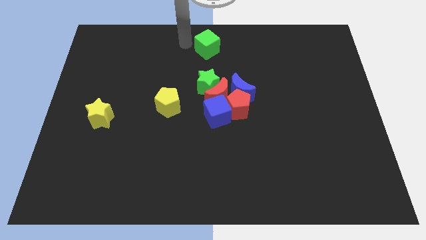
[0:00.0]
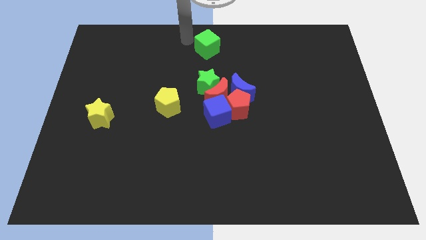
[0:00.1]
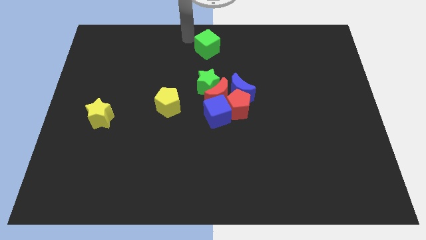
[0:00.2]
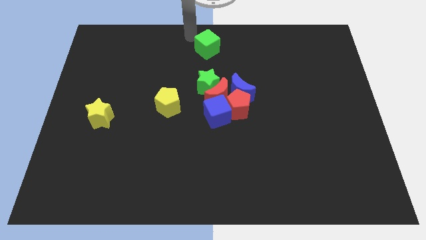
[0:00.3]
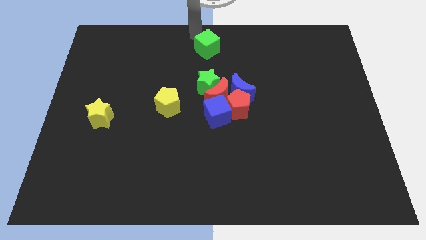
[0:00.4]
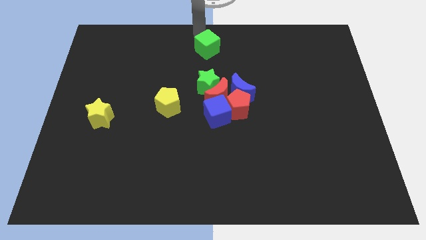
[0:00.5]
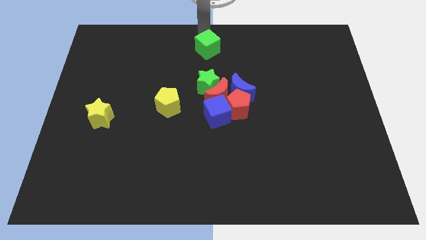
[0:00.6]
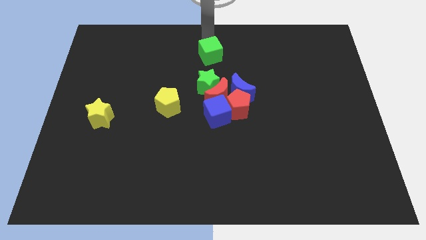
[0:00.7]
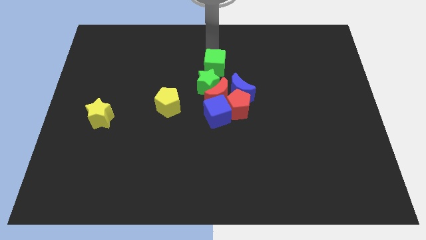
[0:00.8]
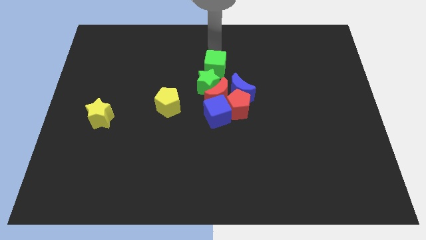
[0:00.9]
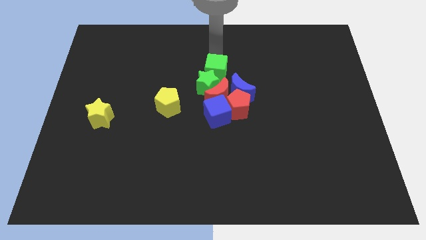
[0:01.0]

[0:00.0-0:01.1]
push the green cube into the top side of the green star

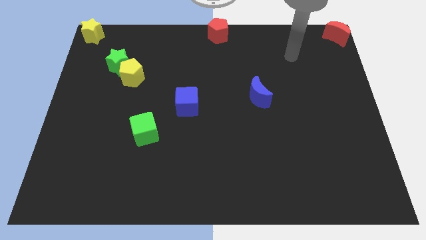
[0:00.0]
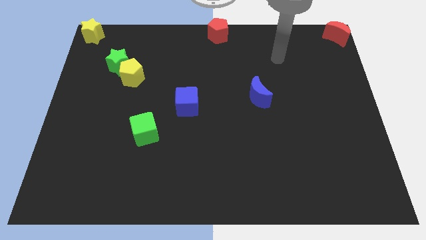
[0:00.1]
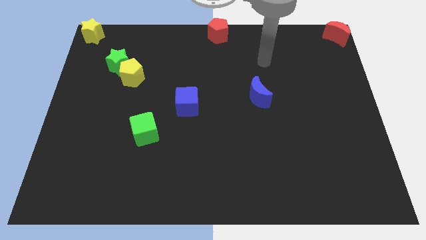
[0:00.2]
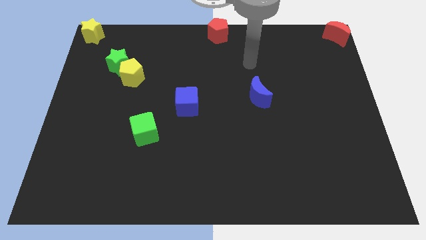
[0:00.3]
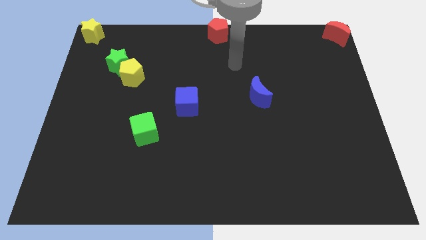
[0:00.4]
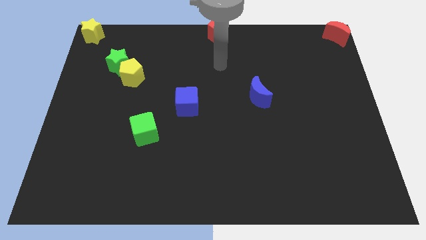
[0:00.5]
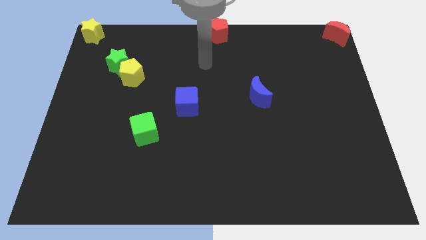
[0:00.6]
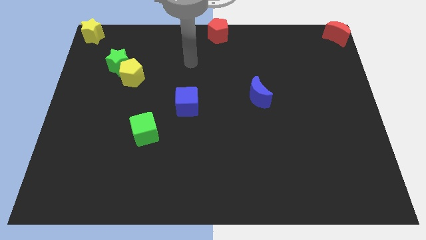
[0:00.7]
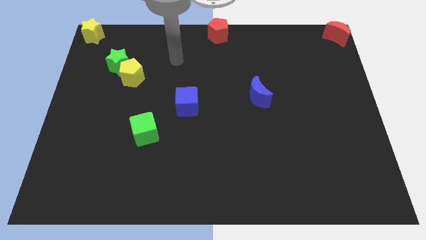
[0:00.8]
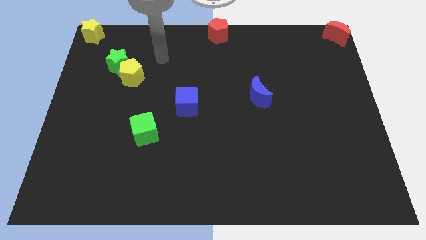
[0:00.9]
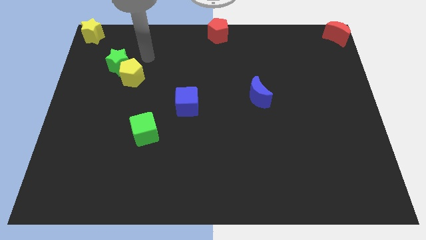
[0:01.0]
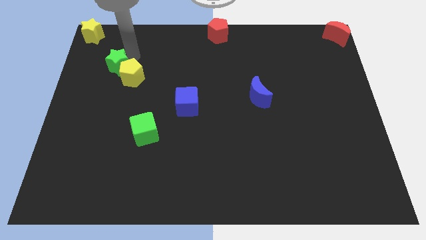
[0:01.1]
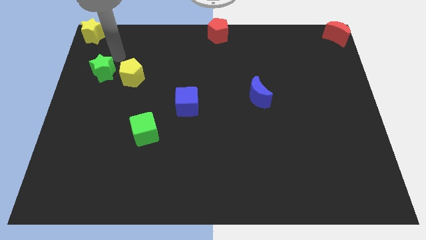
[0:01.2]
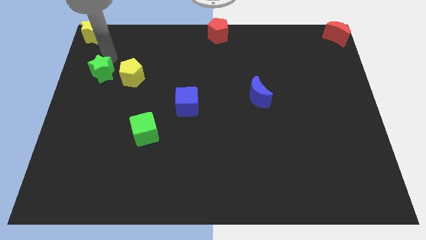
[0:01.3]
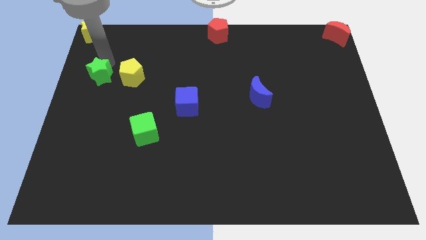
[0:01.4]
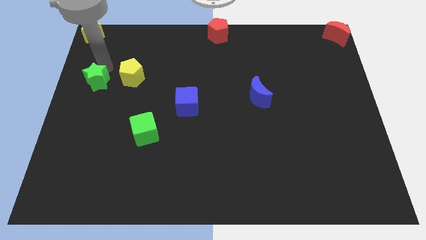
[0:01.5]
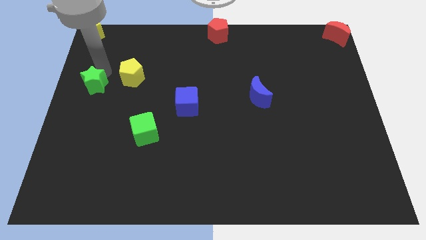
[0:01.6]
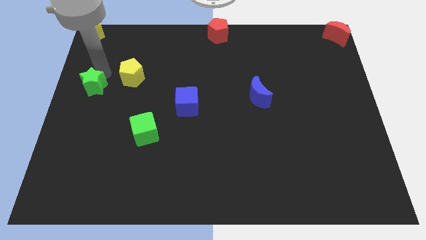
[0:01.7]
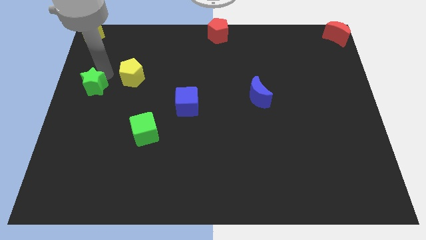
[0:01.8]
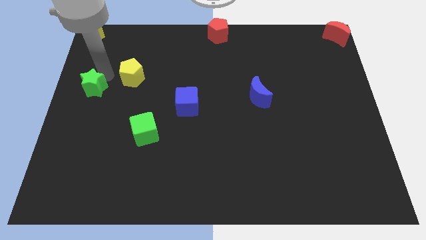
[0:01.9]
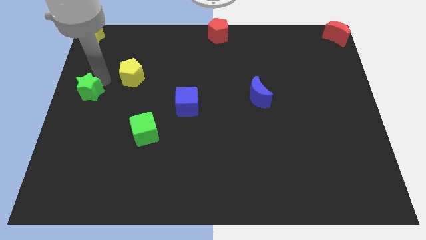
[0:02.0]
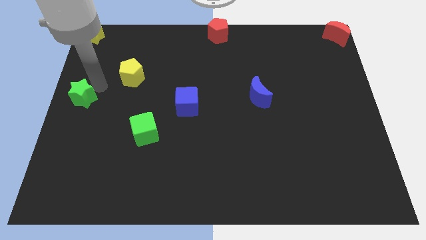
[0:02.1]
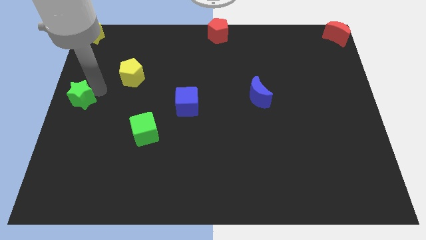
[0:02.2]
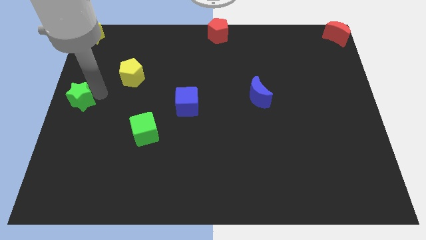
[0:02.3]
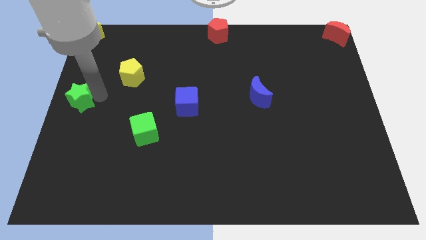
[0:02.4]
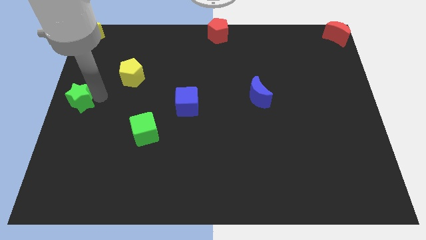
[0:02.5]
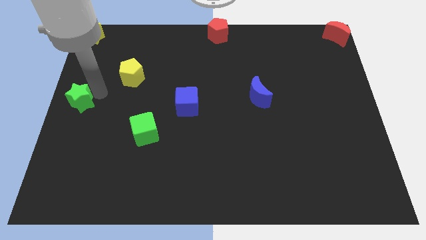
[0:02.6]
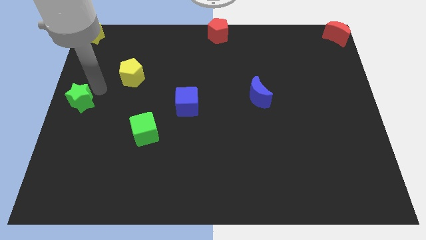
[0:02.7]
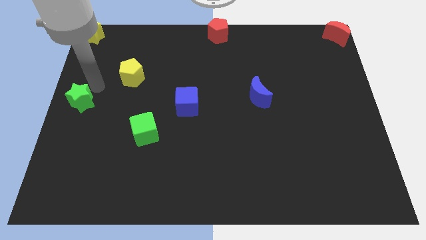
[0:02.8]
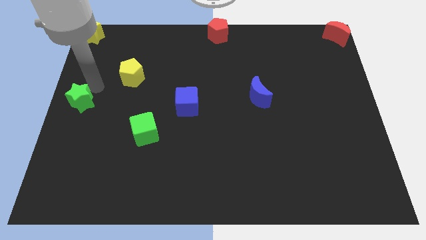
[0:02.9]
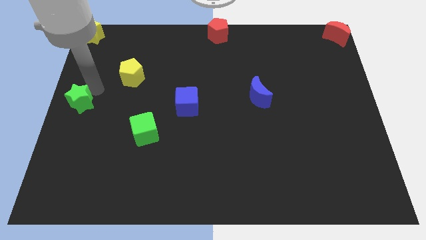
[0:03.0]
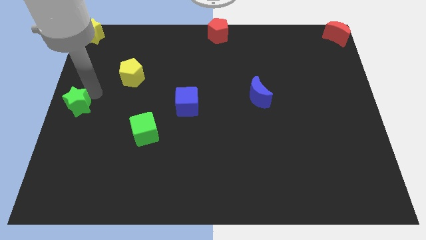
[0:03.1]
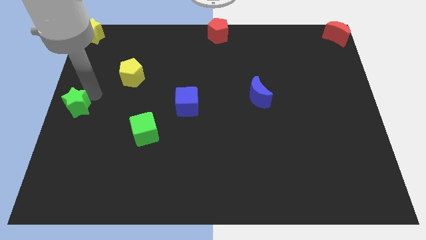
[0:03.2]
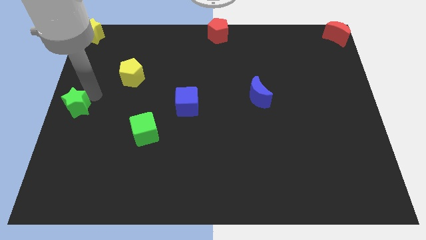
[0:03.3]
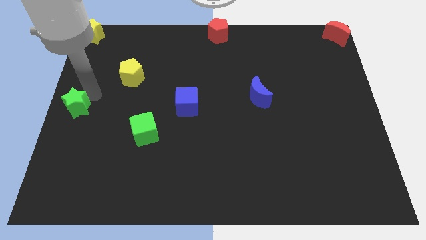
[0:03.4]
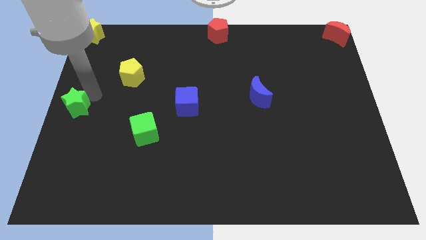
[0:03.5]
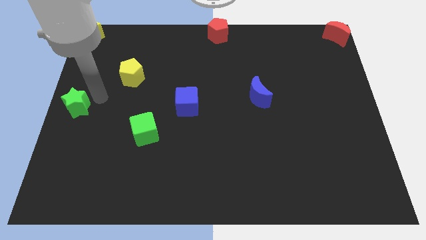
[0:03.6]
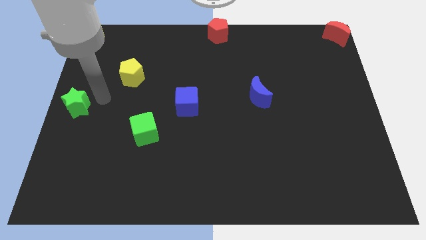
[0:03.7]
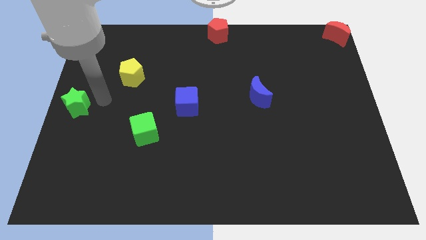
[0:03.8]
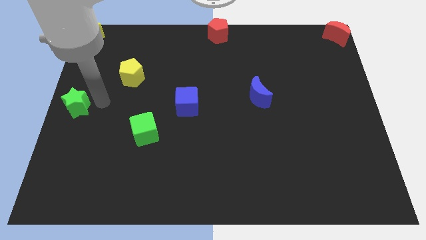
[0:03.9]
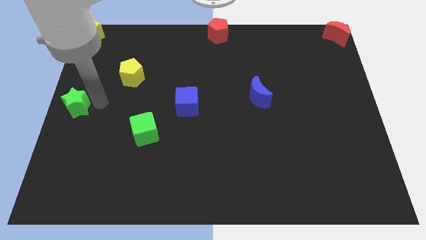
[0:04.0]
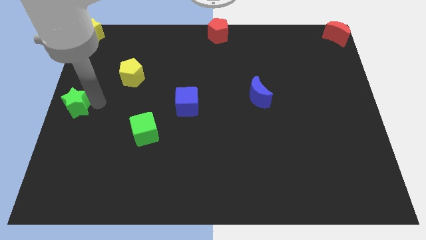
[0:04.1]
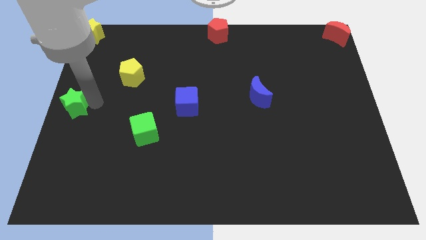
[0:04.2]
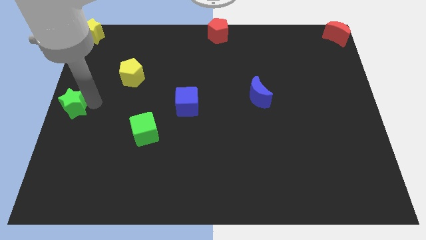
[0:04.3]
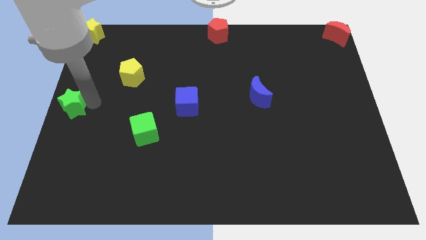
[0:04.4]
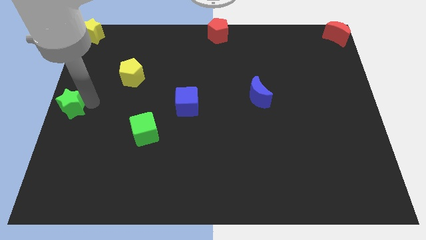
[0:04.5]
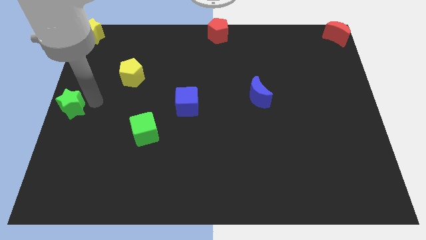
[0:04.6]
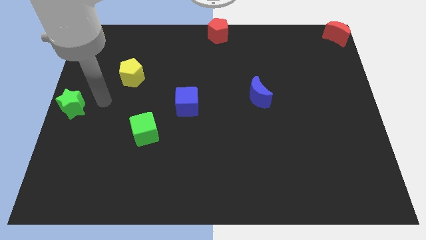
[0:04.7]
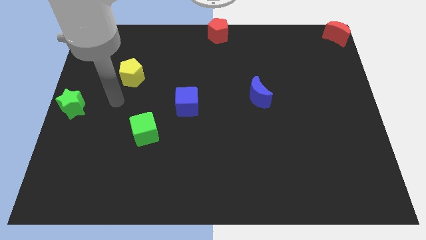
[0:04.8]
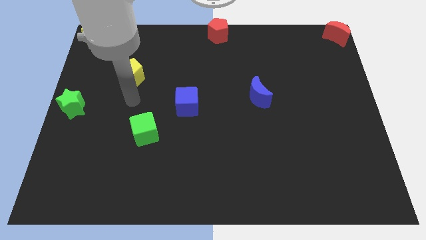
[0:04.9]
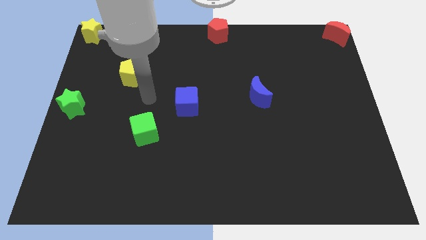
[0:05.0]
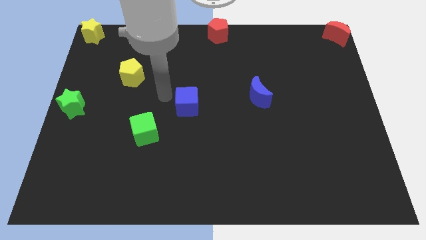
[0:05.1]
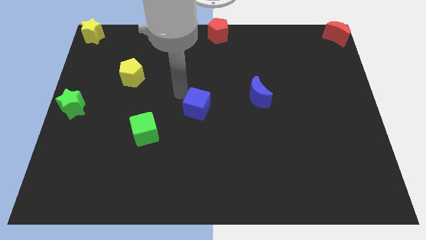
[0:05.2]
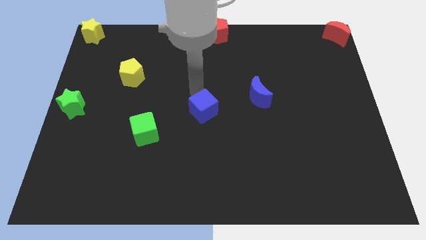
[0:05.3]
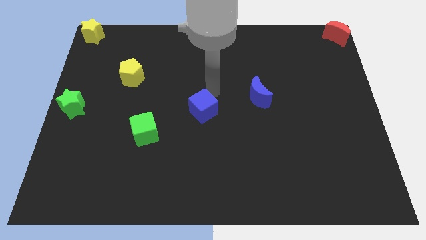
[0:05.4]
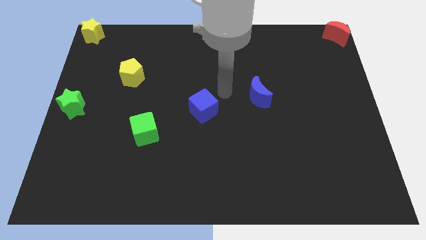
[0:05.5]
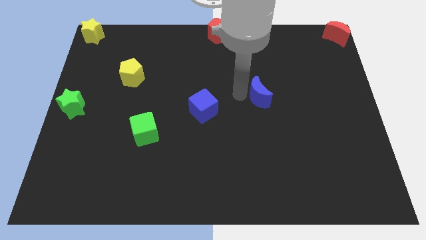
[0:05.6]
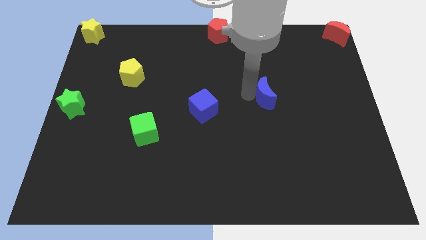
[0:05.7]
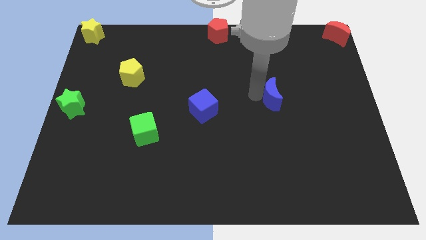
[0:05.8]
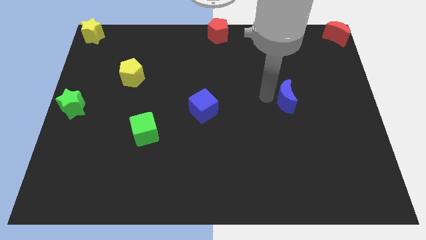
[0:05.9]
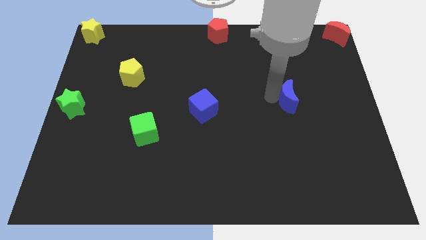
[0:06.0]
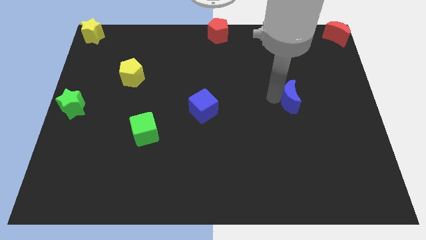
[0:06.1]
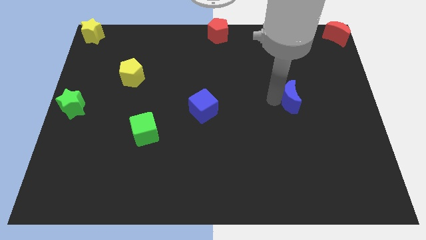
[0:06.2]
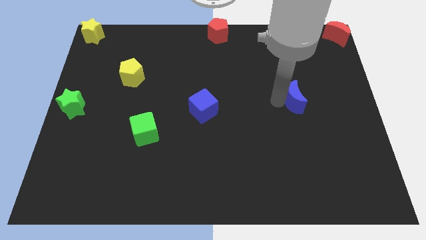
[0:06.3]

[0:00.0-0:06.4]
drag the green star towards the left center of the board

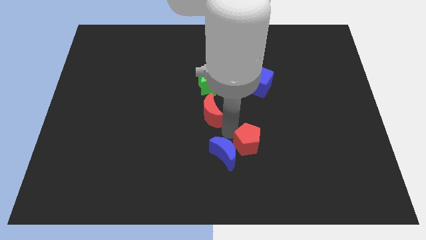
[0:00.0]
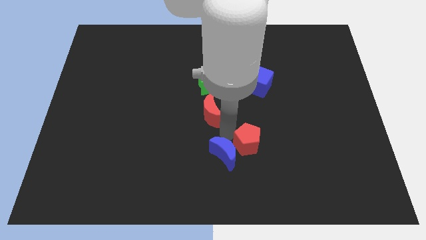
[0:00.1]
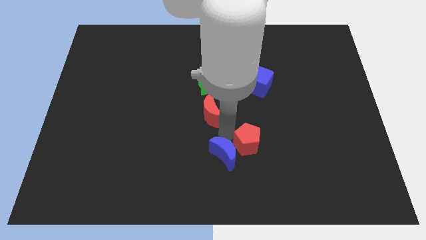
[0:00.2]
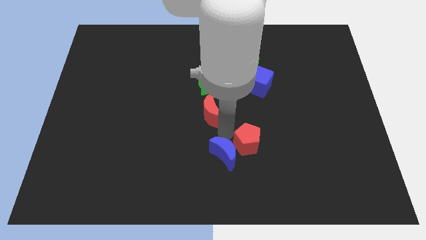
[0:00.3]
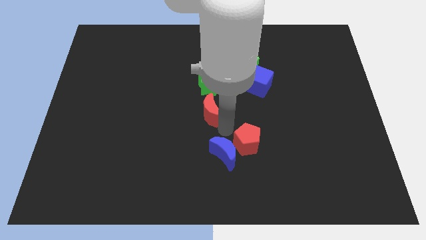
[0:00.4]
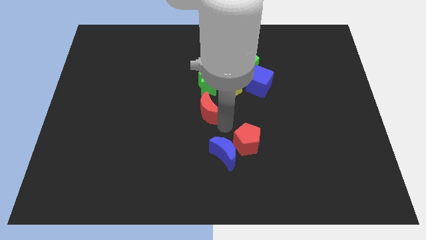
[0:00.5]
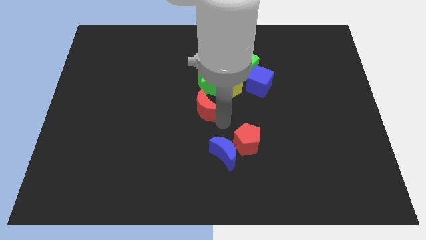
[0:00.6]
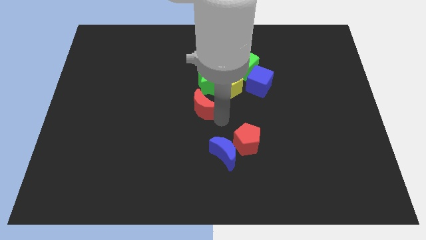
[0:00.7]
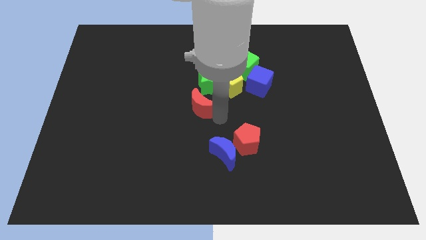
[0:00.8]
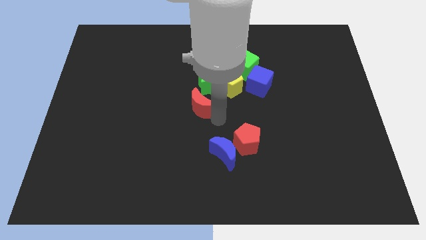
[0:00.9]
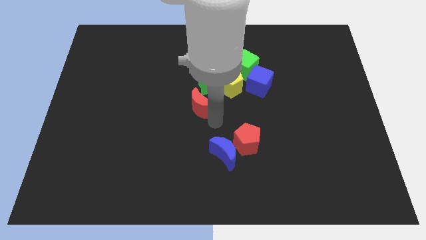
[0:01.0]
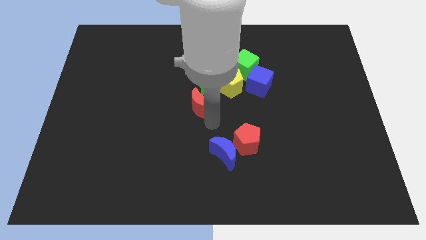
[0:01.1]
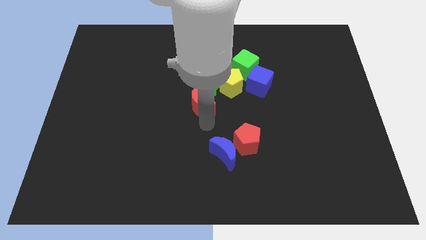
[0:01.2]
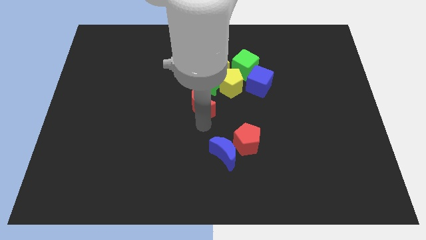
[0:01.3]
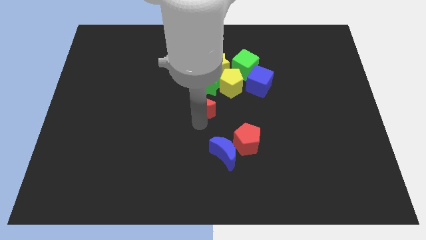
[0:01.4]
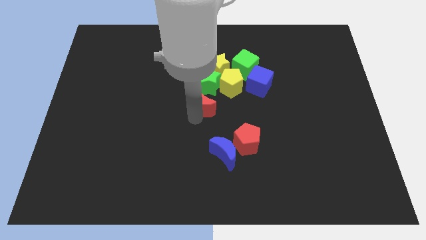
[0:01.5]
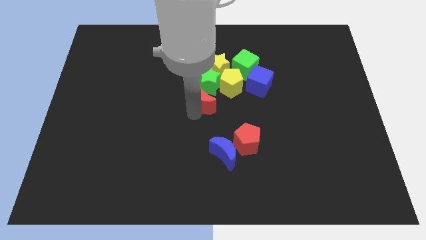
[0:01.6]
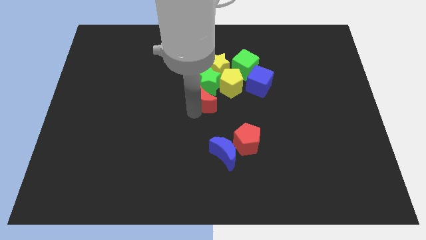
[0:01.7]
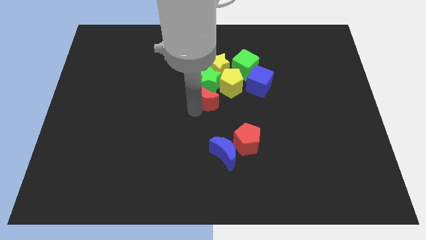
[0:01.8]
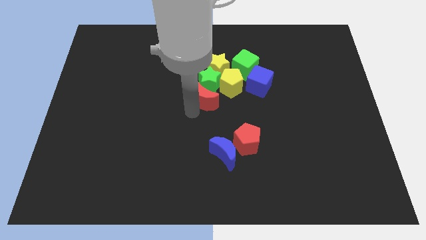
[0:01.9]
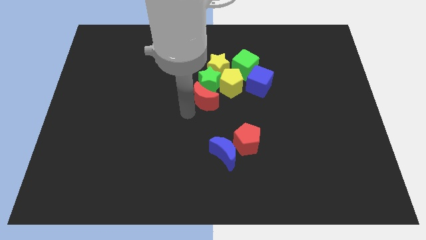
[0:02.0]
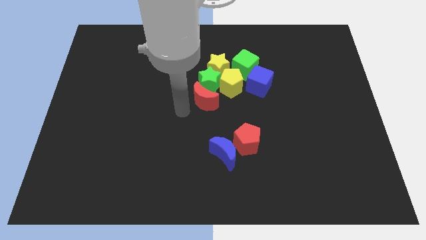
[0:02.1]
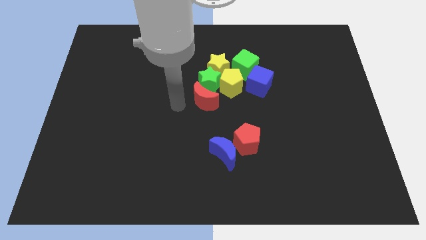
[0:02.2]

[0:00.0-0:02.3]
move the red crescent into the bottom side of the green star
